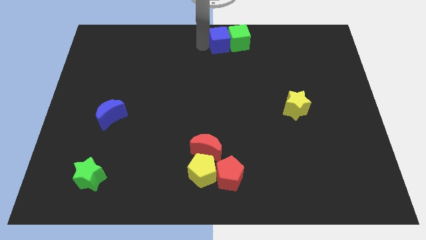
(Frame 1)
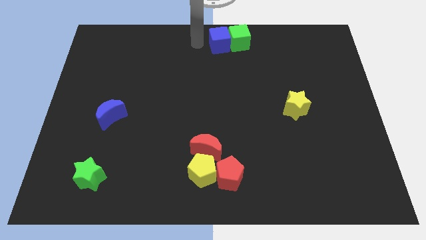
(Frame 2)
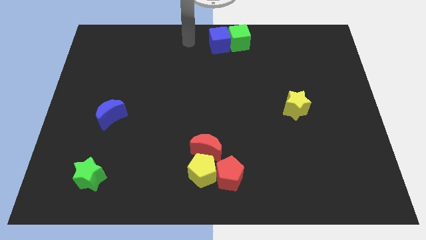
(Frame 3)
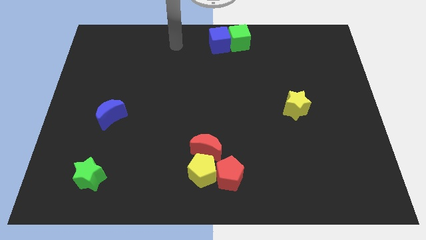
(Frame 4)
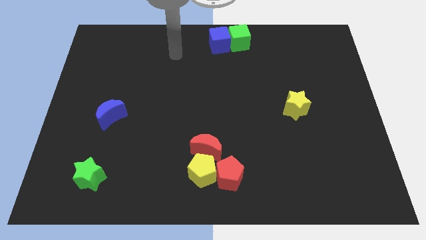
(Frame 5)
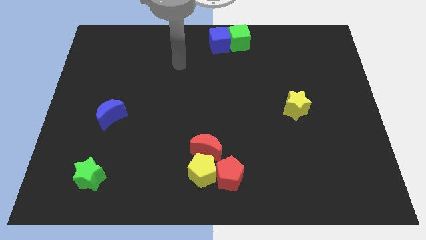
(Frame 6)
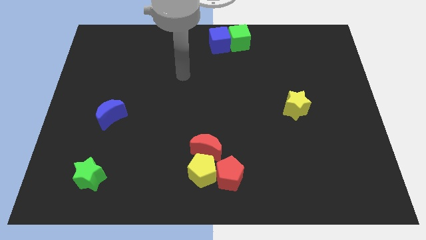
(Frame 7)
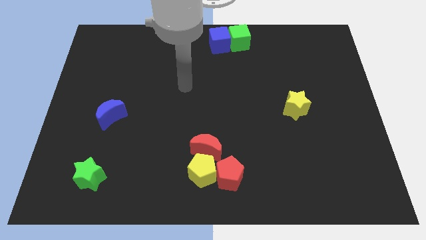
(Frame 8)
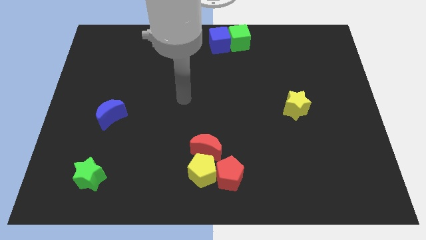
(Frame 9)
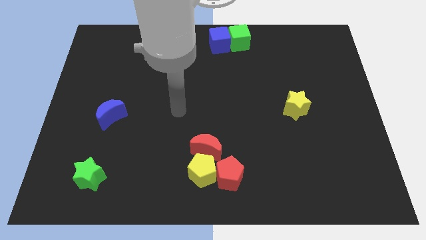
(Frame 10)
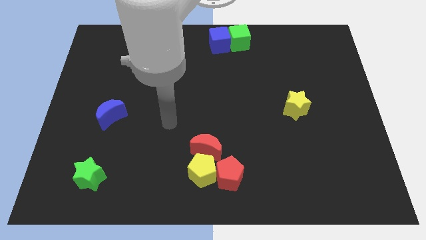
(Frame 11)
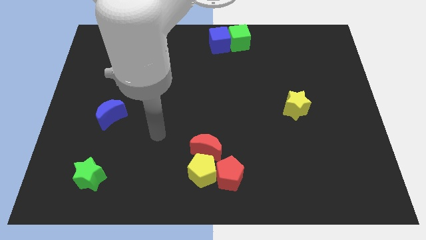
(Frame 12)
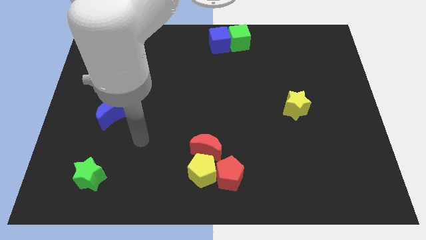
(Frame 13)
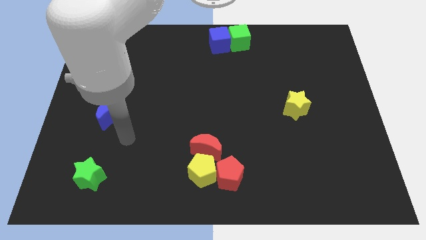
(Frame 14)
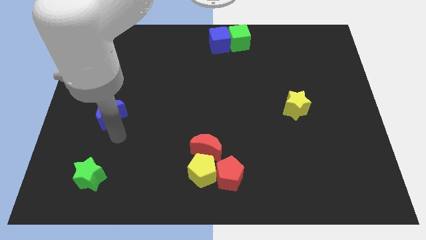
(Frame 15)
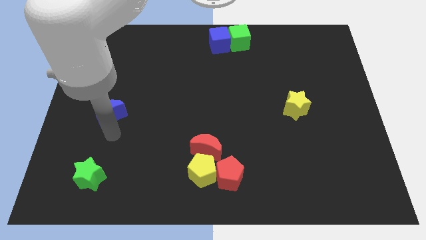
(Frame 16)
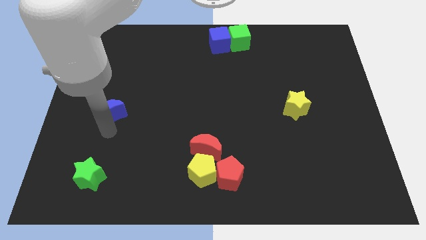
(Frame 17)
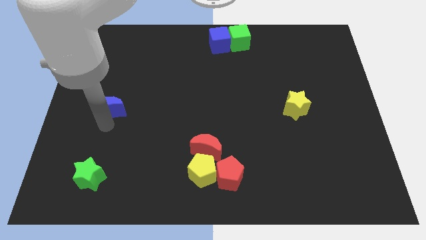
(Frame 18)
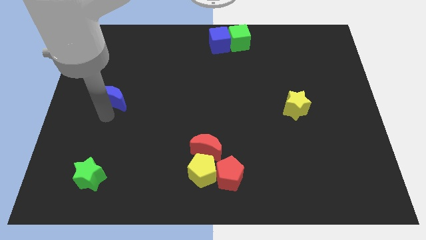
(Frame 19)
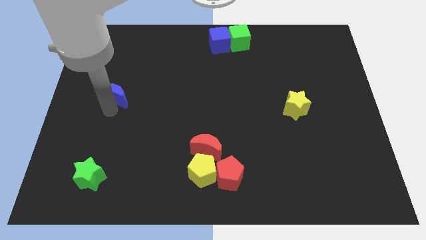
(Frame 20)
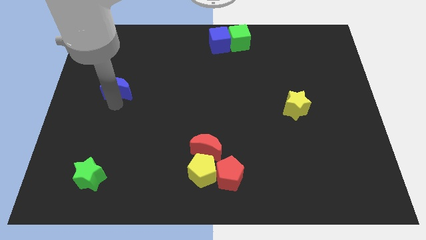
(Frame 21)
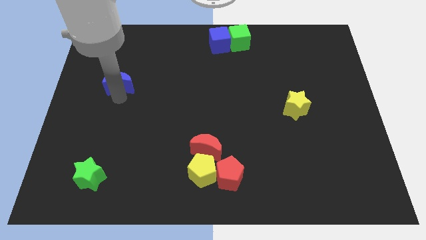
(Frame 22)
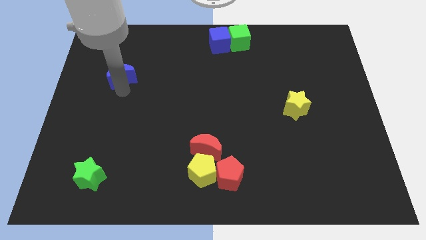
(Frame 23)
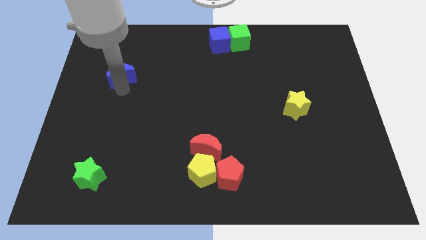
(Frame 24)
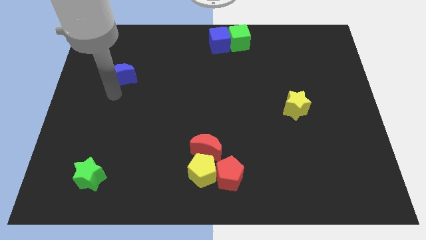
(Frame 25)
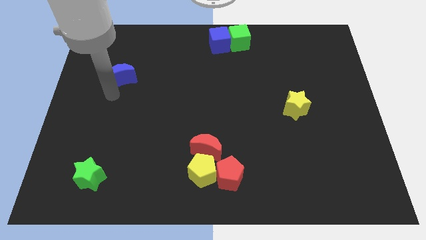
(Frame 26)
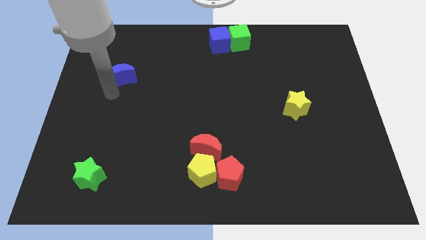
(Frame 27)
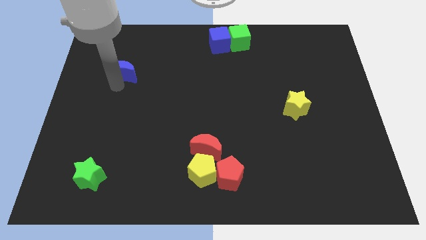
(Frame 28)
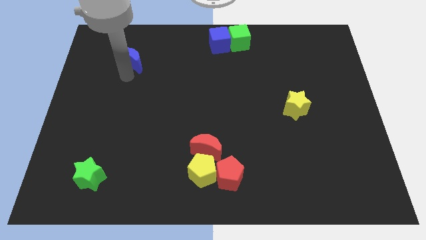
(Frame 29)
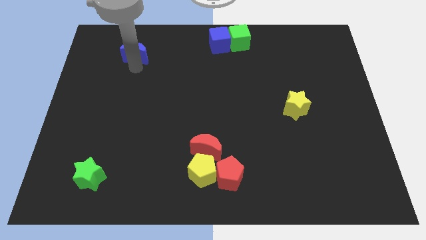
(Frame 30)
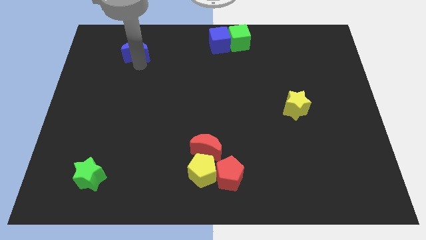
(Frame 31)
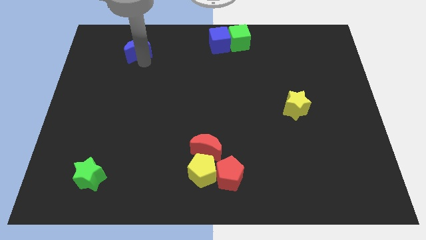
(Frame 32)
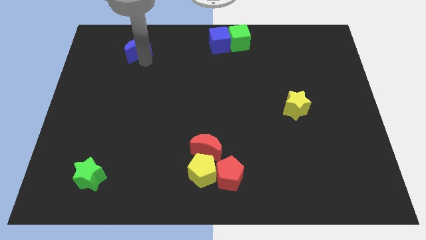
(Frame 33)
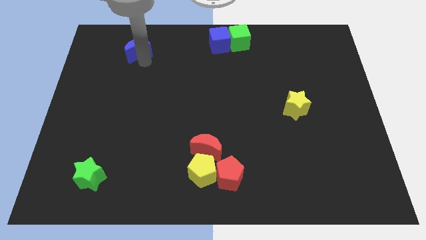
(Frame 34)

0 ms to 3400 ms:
drag the blue crescent to the top side of the blue moon

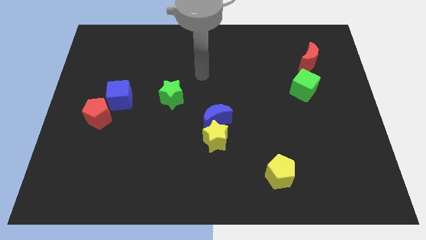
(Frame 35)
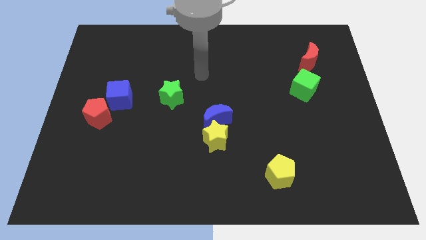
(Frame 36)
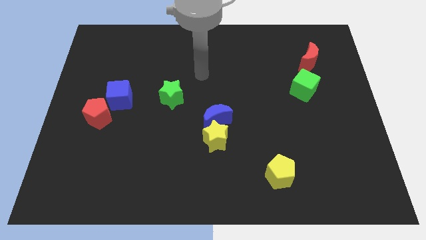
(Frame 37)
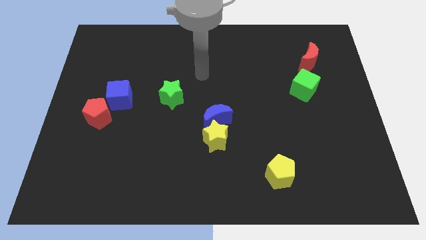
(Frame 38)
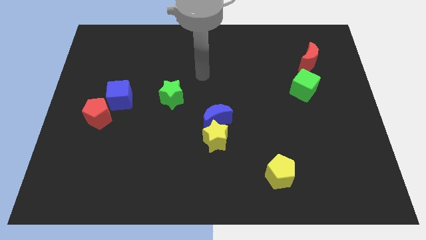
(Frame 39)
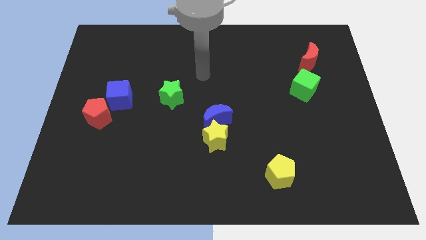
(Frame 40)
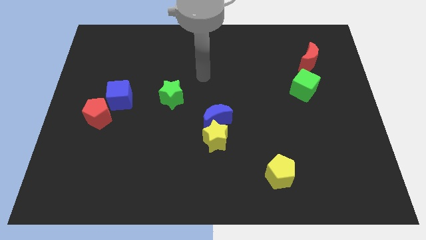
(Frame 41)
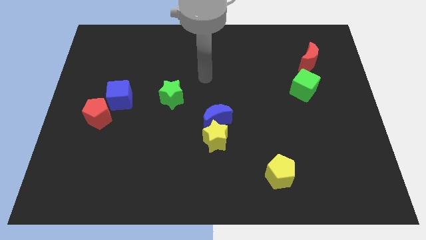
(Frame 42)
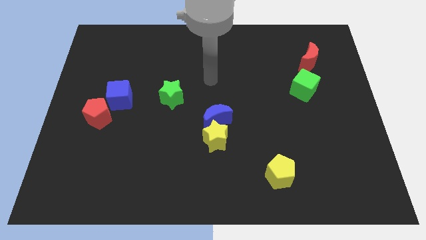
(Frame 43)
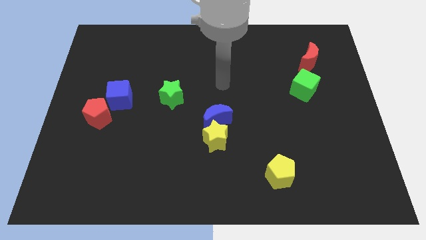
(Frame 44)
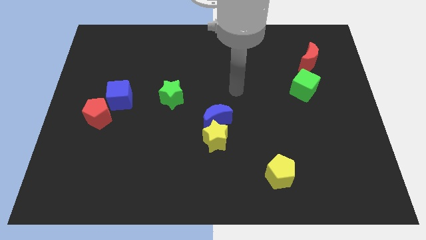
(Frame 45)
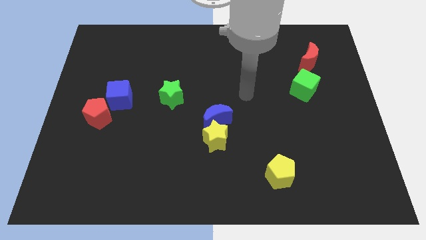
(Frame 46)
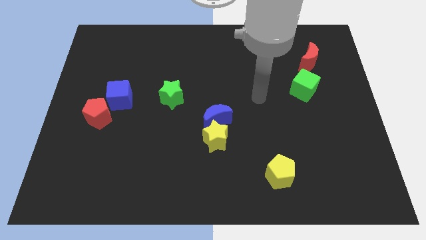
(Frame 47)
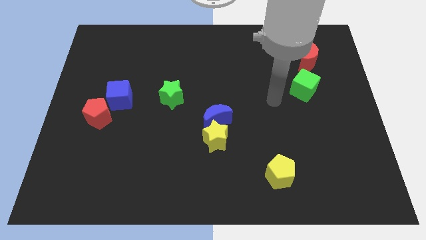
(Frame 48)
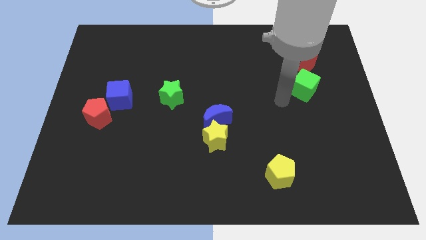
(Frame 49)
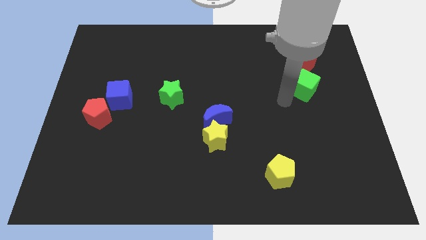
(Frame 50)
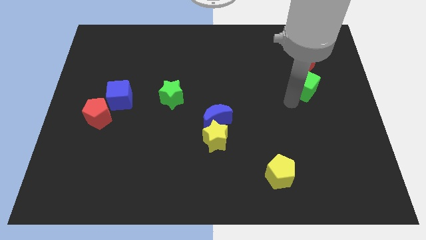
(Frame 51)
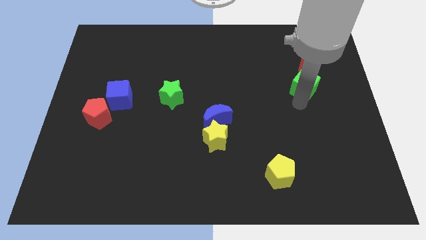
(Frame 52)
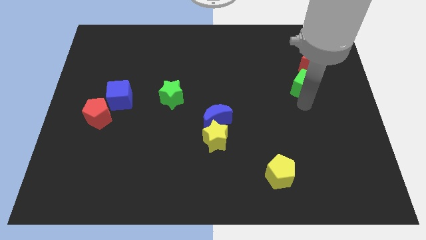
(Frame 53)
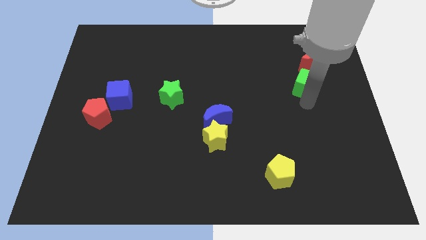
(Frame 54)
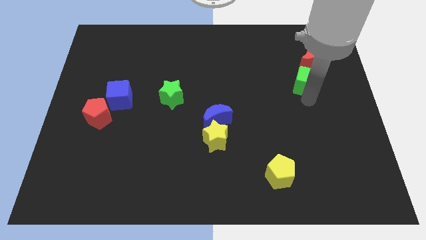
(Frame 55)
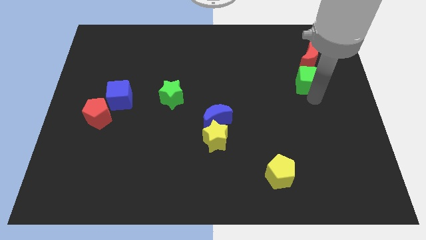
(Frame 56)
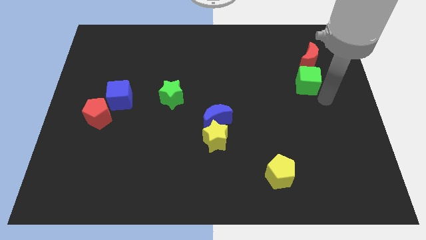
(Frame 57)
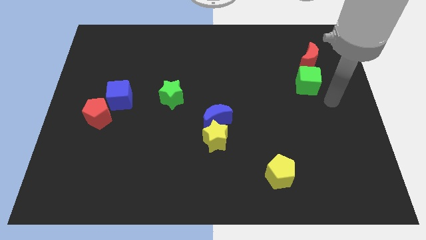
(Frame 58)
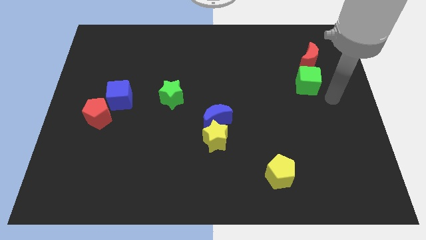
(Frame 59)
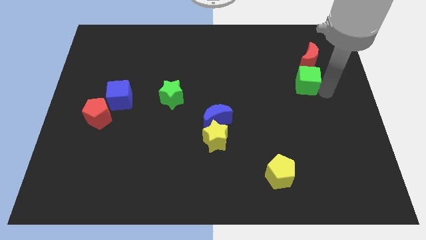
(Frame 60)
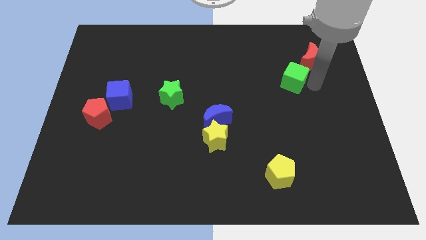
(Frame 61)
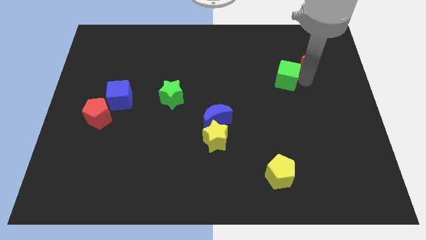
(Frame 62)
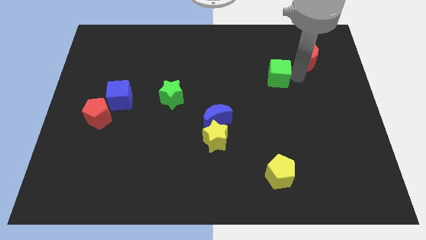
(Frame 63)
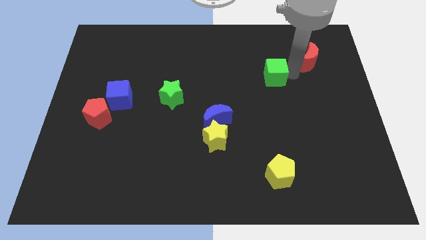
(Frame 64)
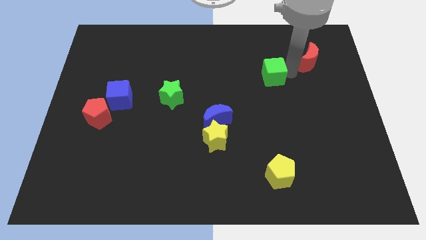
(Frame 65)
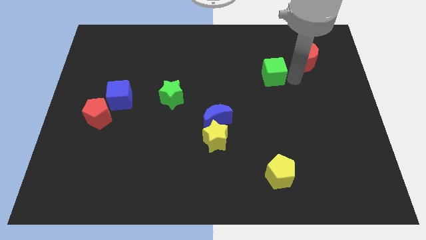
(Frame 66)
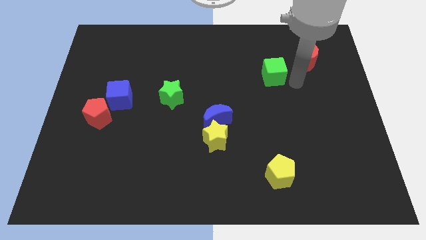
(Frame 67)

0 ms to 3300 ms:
place the green cube diagonal to the red moon

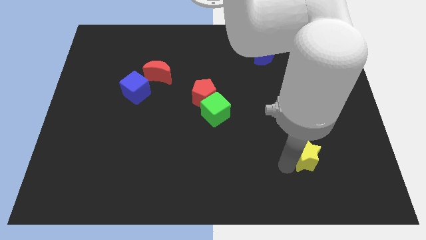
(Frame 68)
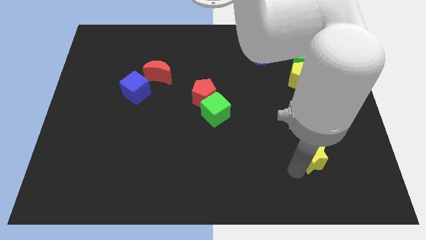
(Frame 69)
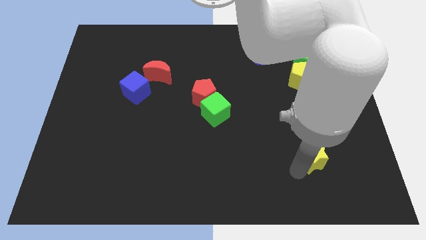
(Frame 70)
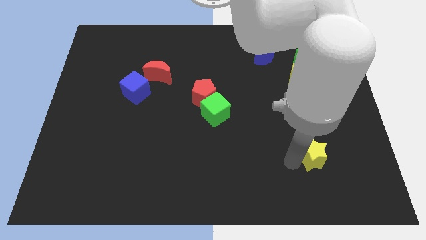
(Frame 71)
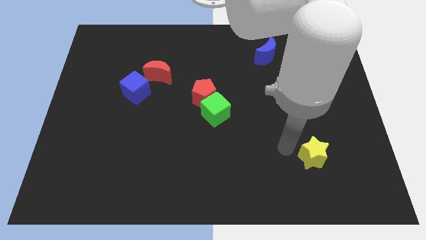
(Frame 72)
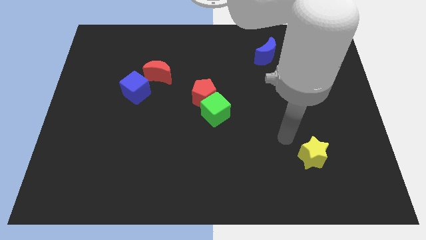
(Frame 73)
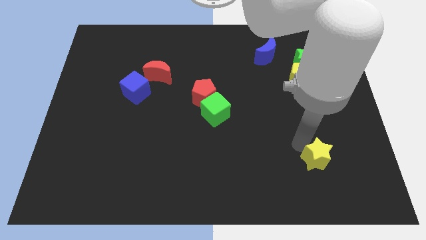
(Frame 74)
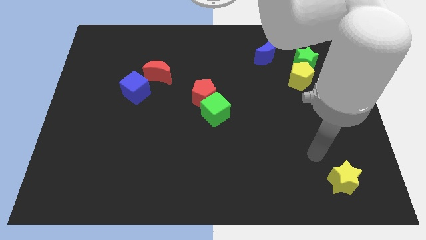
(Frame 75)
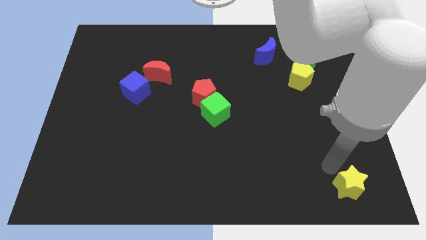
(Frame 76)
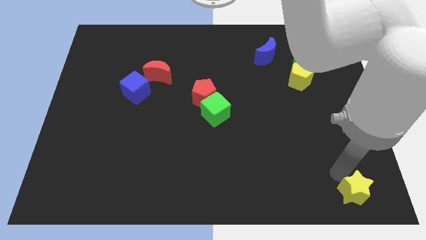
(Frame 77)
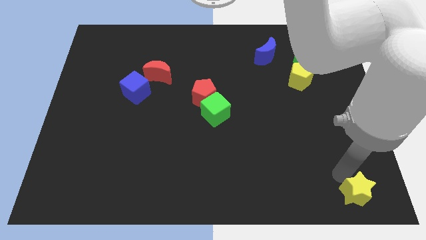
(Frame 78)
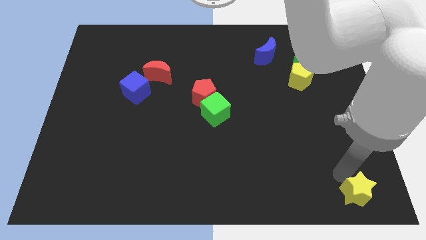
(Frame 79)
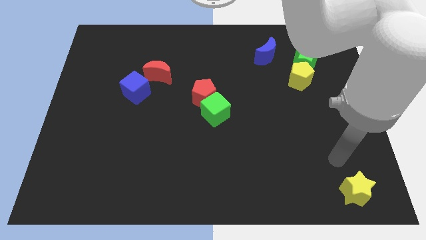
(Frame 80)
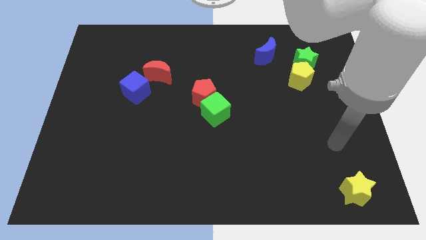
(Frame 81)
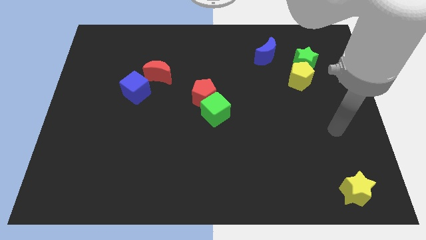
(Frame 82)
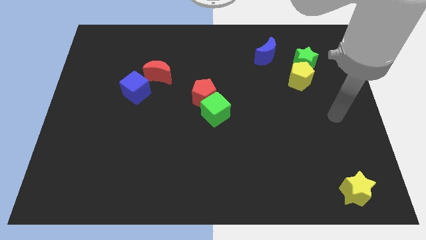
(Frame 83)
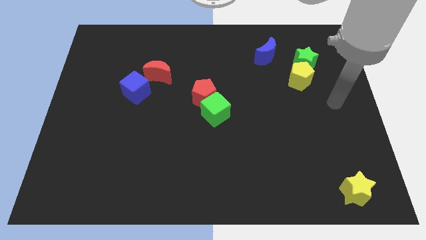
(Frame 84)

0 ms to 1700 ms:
move the yellow star to the right bottom of the board

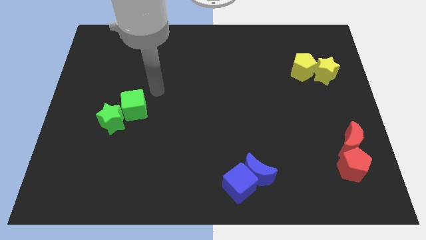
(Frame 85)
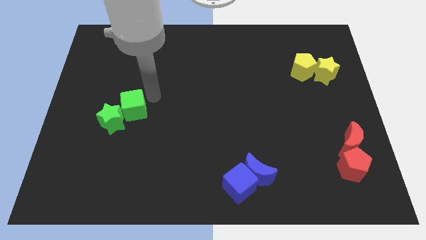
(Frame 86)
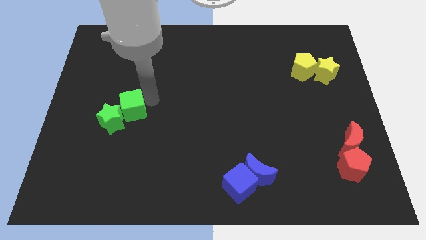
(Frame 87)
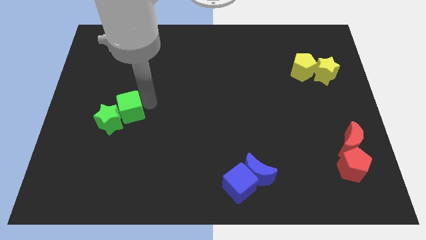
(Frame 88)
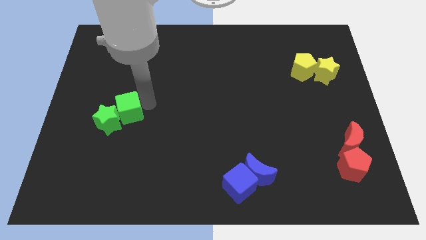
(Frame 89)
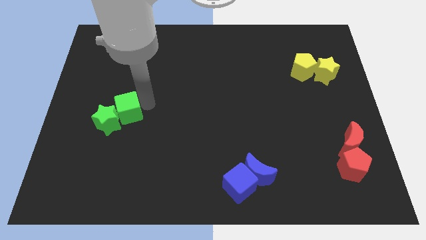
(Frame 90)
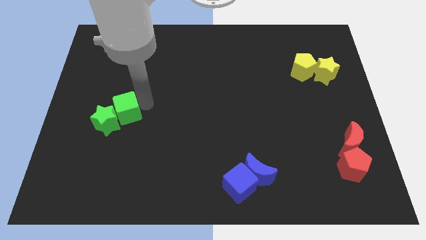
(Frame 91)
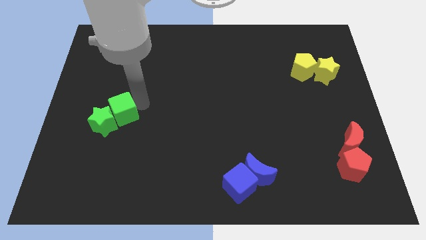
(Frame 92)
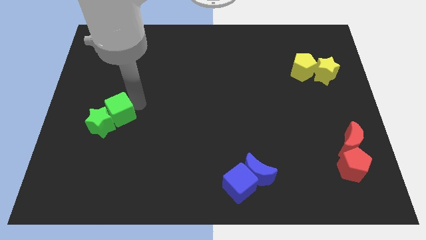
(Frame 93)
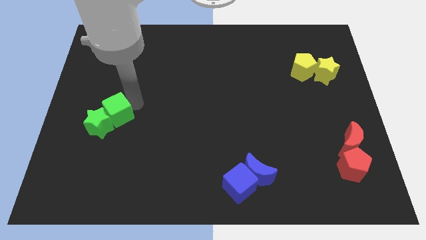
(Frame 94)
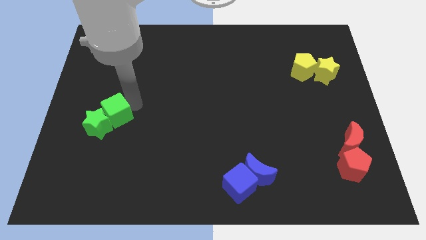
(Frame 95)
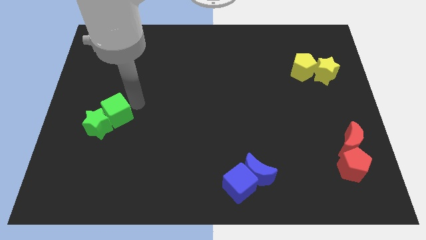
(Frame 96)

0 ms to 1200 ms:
push the green cube into the green star towards the left center of the board
